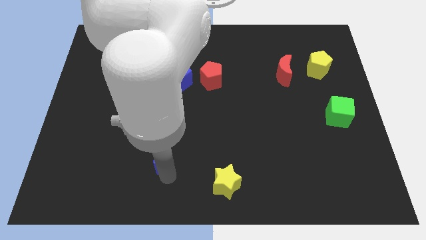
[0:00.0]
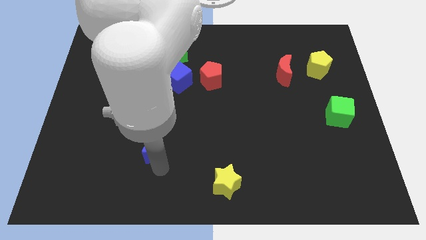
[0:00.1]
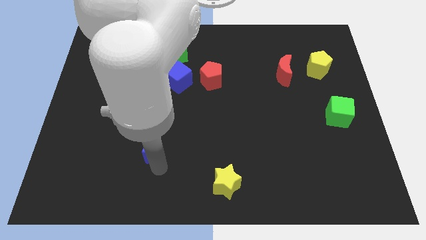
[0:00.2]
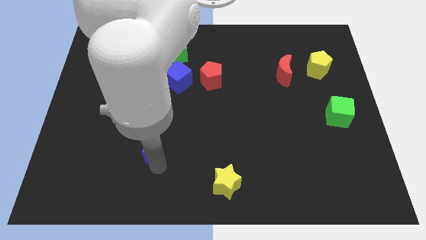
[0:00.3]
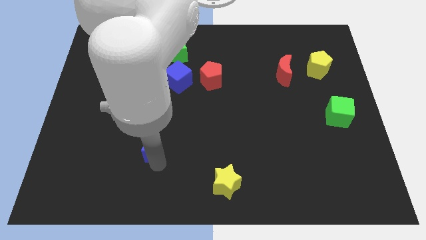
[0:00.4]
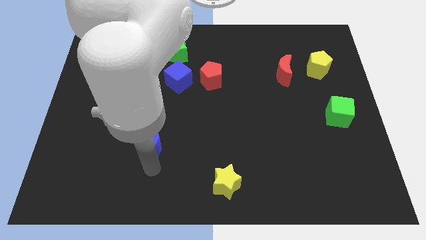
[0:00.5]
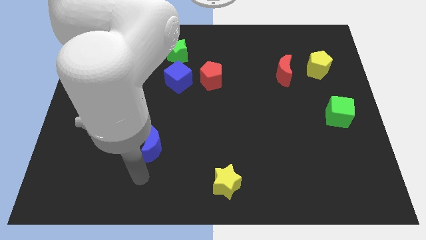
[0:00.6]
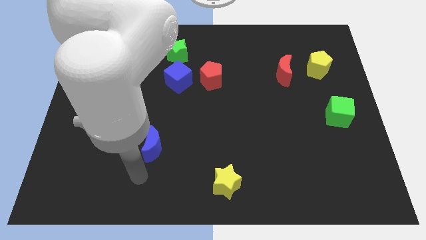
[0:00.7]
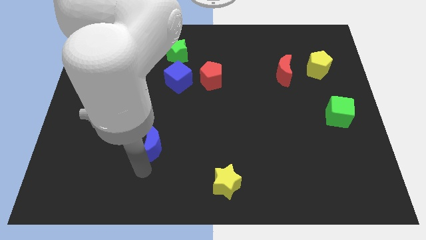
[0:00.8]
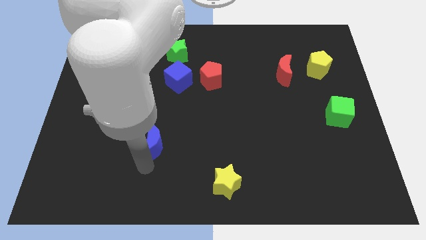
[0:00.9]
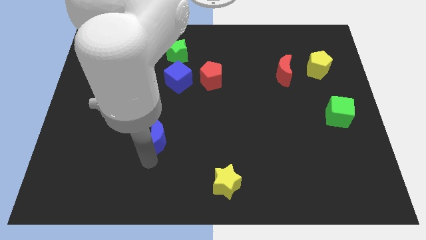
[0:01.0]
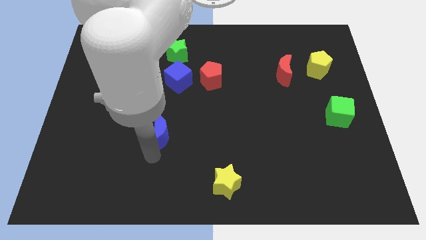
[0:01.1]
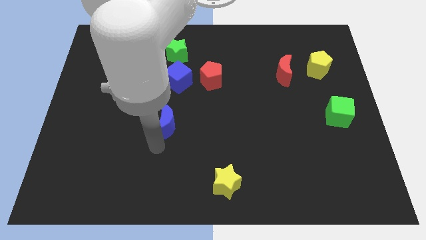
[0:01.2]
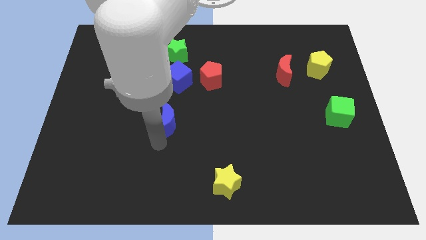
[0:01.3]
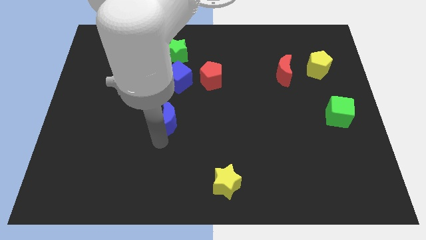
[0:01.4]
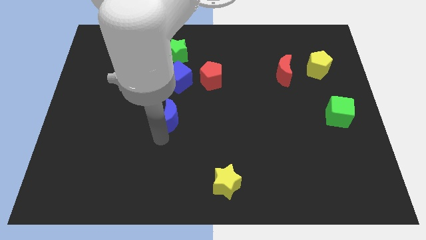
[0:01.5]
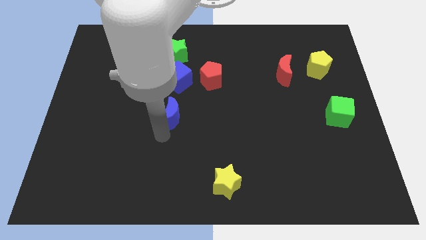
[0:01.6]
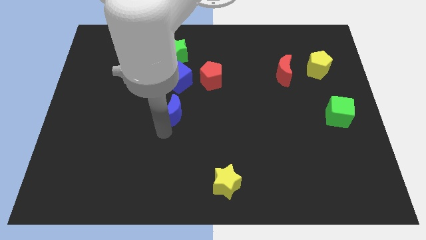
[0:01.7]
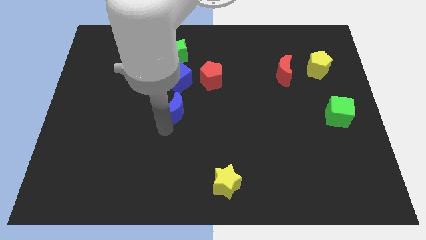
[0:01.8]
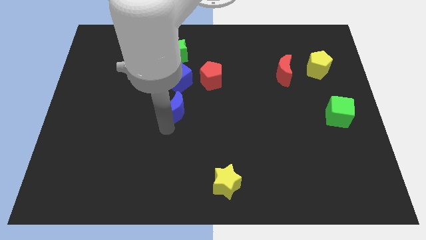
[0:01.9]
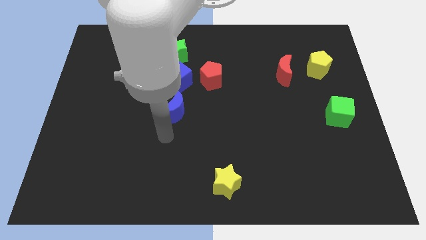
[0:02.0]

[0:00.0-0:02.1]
slide the blue moon close to the blue cube

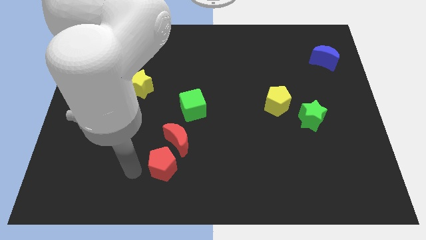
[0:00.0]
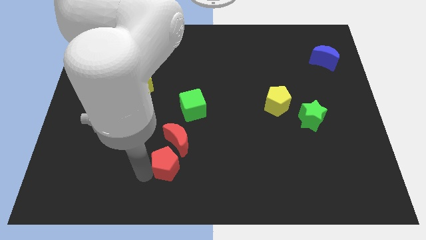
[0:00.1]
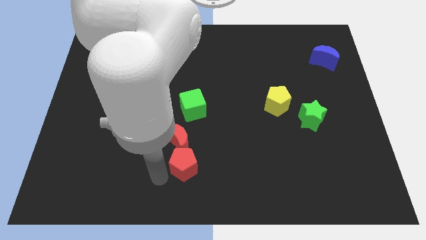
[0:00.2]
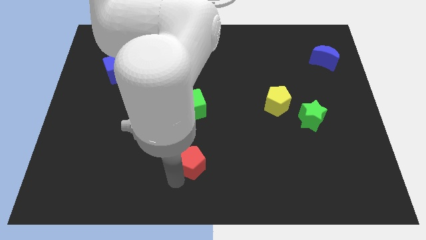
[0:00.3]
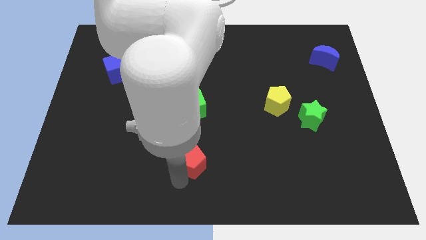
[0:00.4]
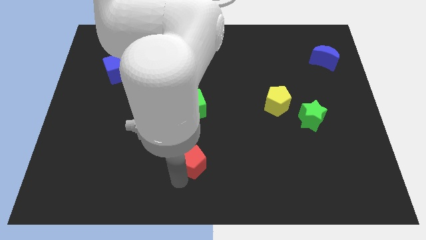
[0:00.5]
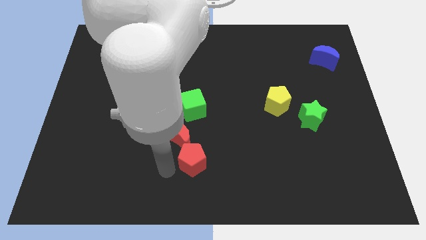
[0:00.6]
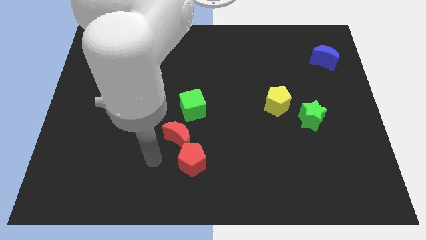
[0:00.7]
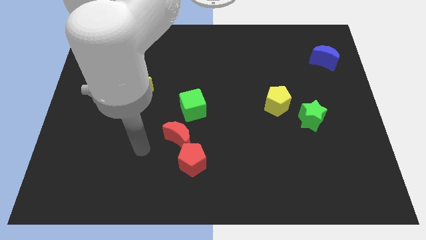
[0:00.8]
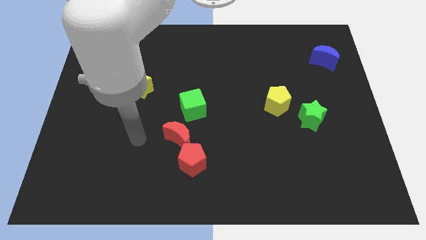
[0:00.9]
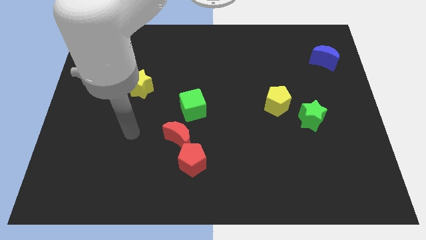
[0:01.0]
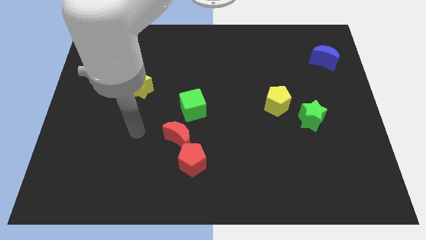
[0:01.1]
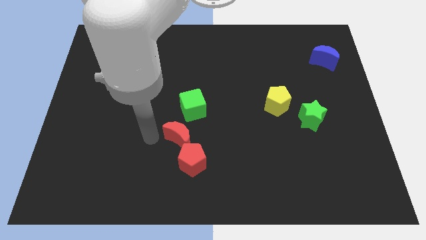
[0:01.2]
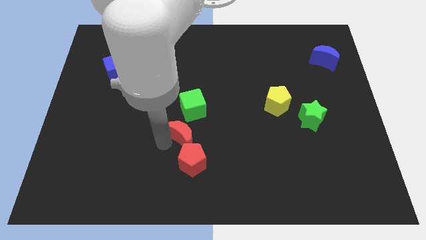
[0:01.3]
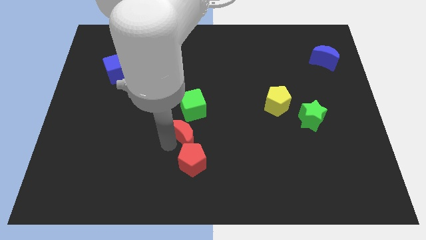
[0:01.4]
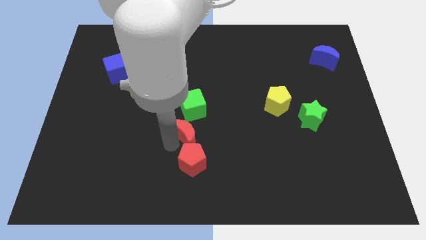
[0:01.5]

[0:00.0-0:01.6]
place both red blocks below the green cube

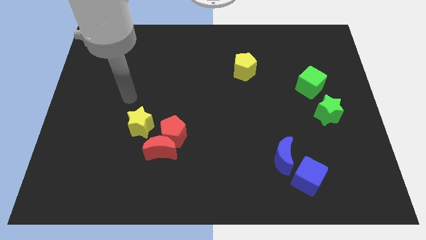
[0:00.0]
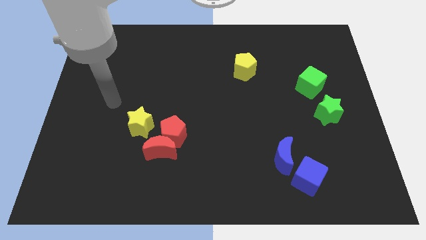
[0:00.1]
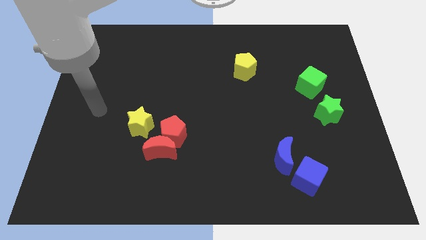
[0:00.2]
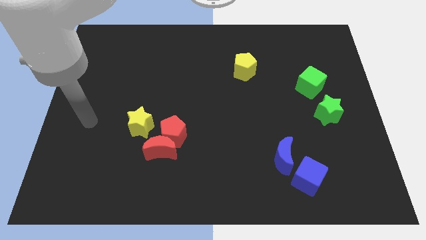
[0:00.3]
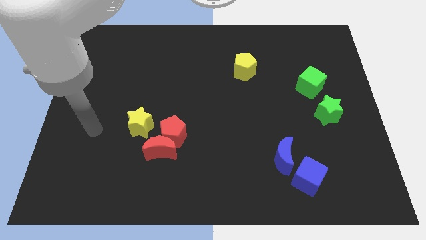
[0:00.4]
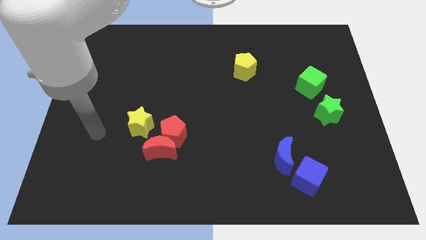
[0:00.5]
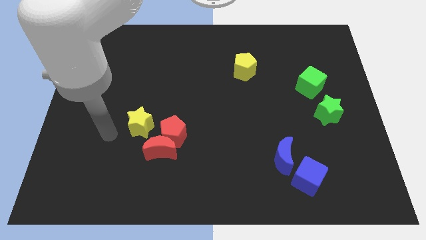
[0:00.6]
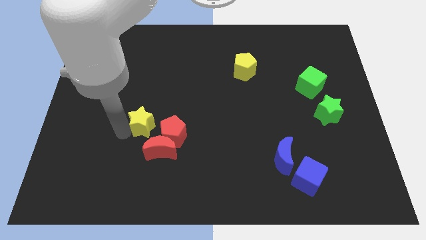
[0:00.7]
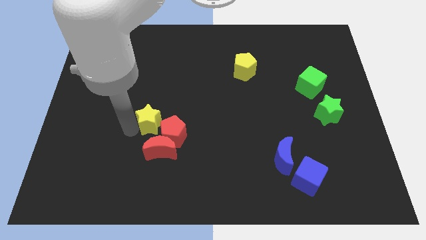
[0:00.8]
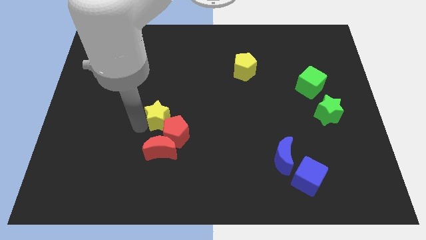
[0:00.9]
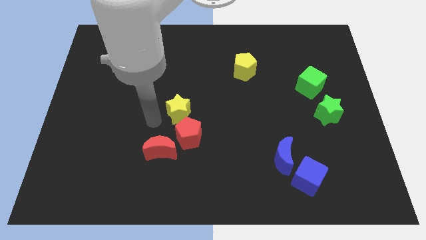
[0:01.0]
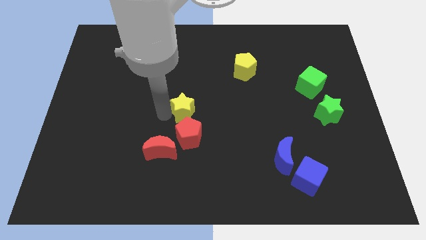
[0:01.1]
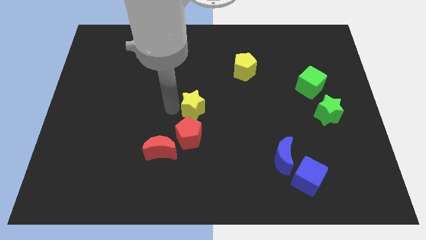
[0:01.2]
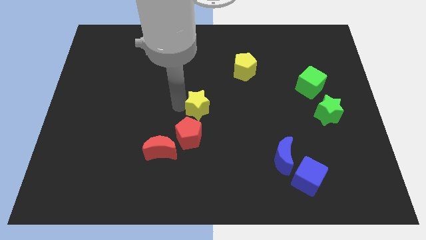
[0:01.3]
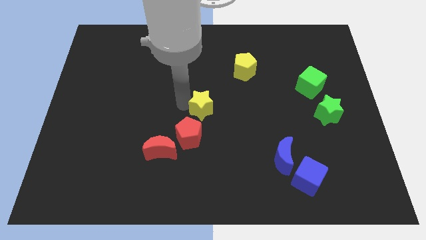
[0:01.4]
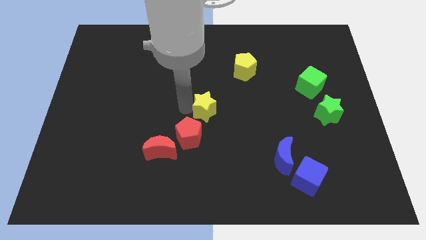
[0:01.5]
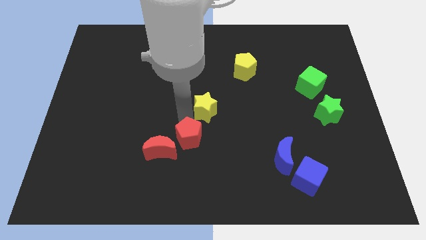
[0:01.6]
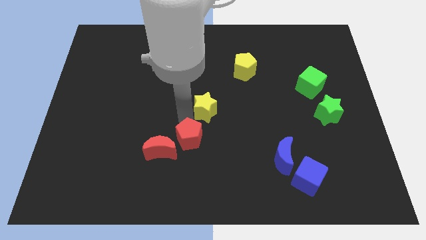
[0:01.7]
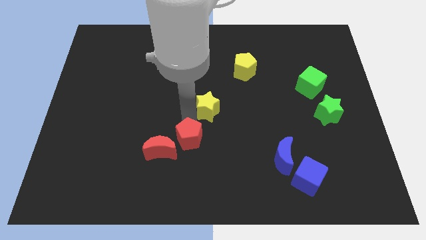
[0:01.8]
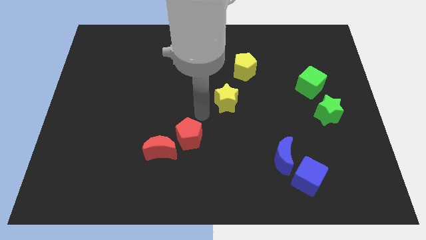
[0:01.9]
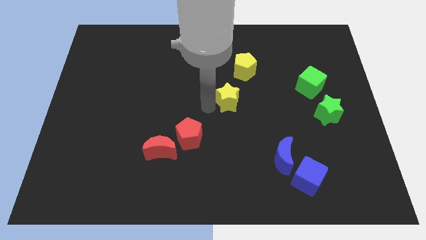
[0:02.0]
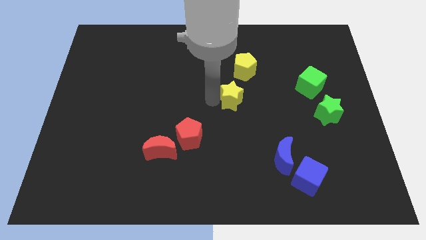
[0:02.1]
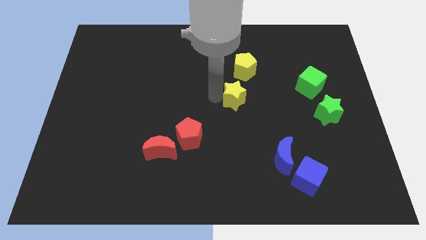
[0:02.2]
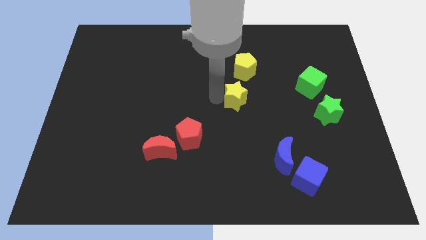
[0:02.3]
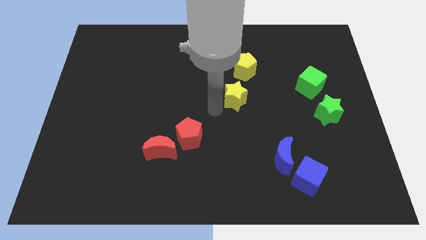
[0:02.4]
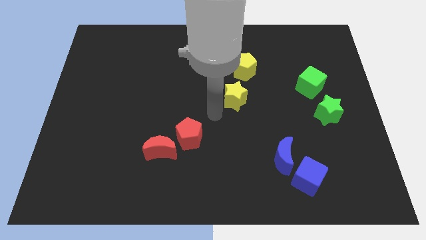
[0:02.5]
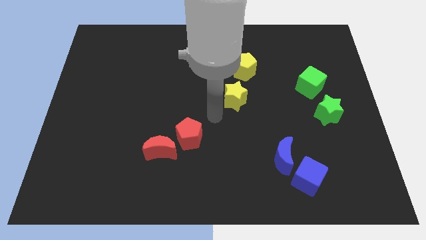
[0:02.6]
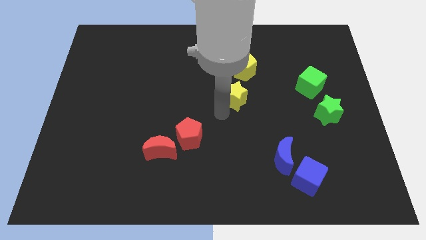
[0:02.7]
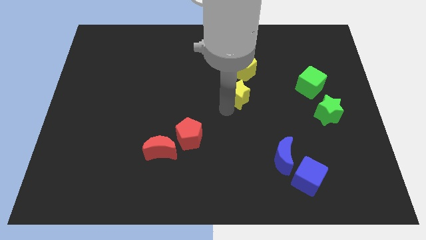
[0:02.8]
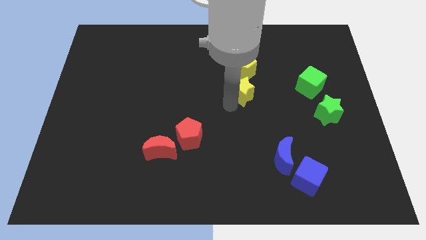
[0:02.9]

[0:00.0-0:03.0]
place the yellow star at the bottom of the yellow pentagon

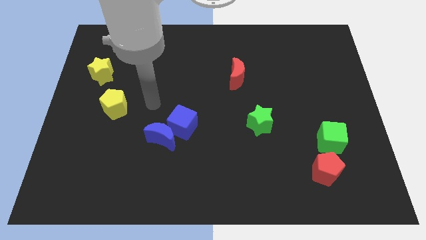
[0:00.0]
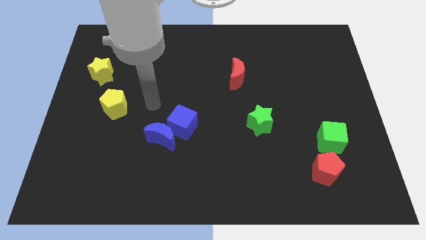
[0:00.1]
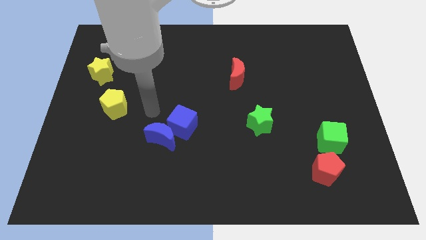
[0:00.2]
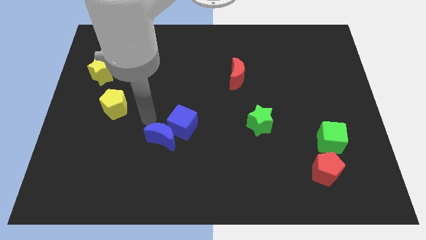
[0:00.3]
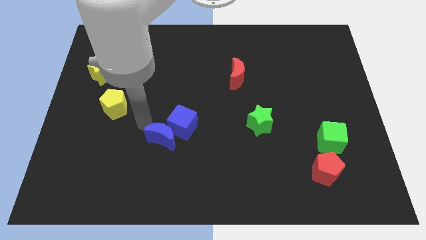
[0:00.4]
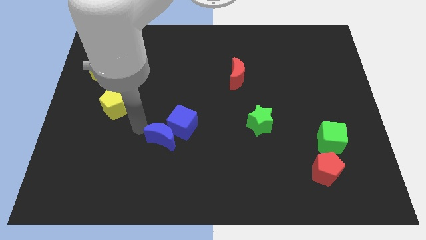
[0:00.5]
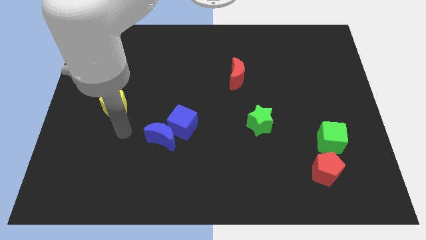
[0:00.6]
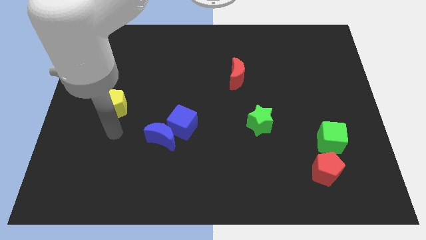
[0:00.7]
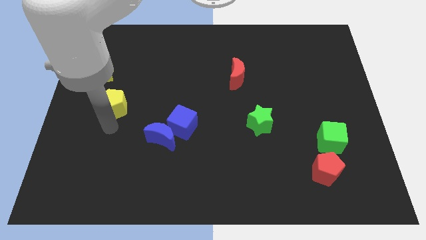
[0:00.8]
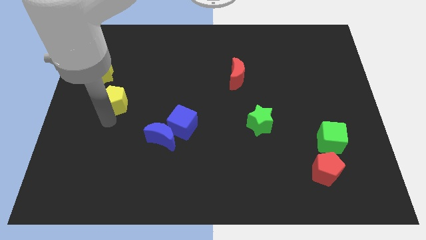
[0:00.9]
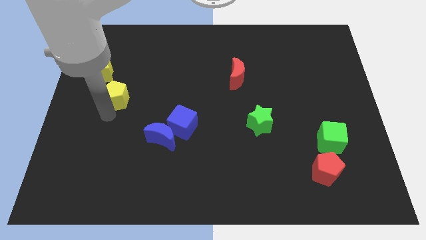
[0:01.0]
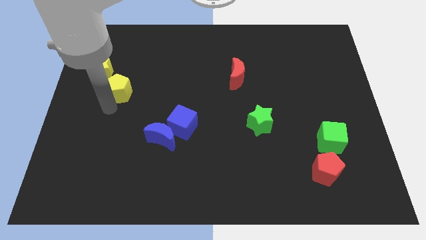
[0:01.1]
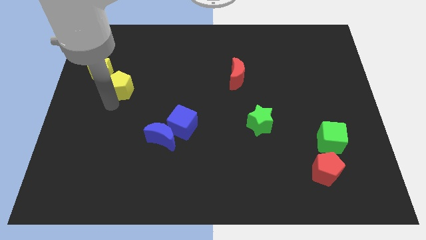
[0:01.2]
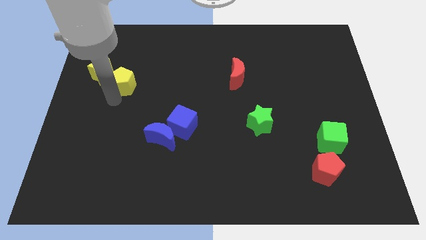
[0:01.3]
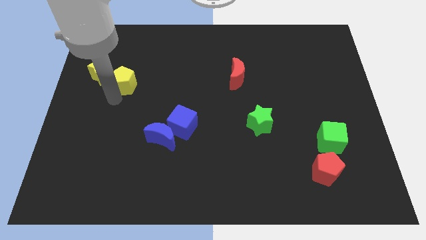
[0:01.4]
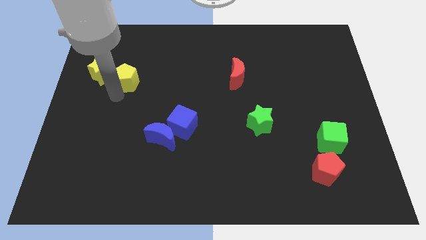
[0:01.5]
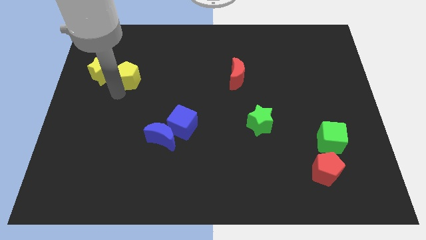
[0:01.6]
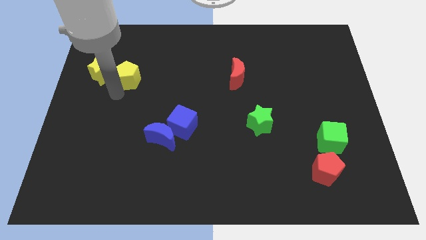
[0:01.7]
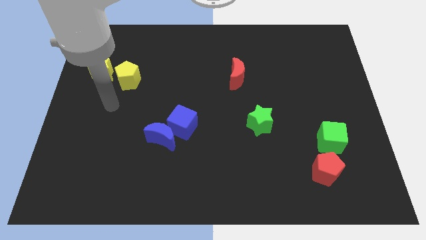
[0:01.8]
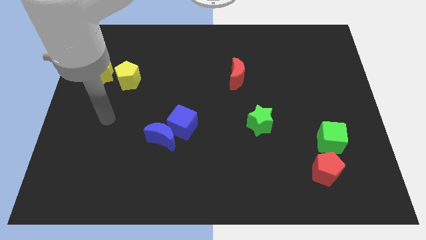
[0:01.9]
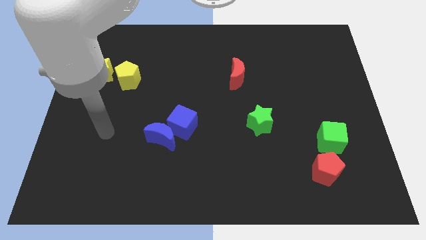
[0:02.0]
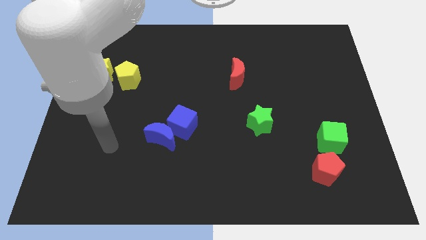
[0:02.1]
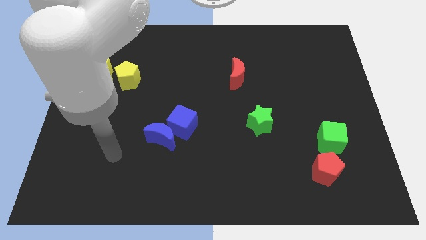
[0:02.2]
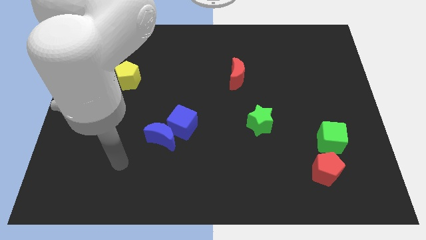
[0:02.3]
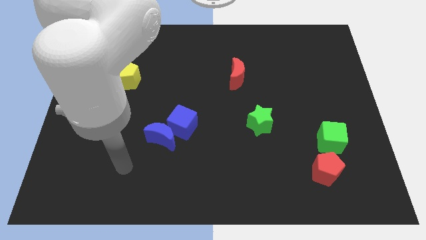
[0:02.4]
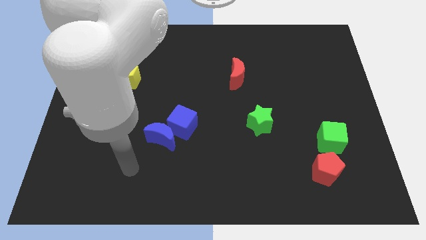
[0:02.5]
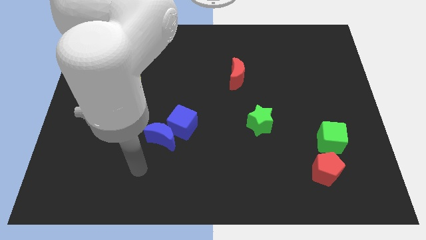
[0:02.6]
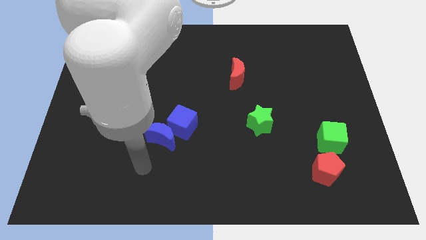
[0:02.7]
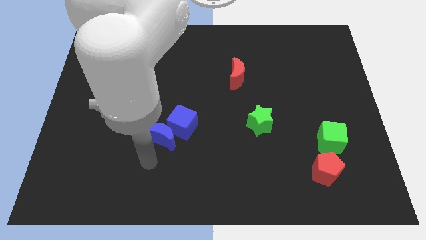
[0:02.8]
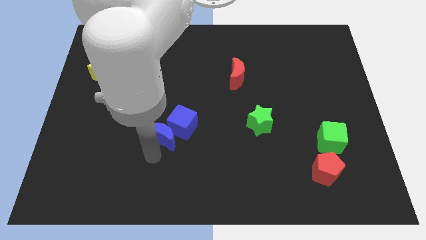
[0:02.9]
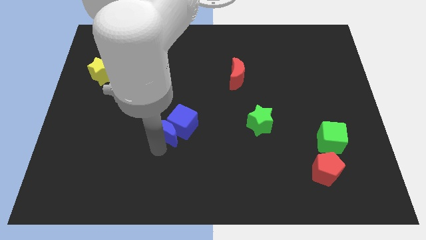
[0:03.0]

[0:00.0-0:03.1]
place yellow pentagon beside yellow star
